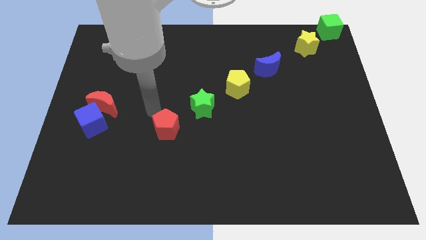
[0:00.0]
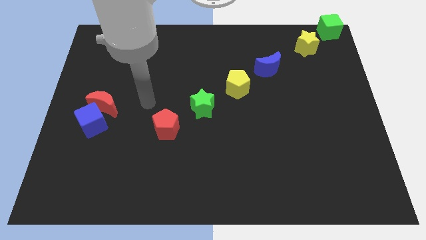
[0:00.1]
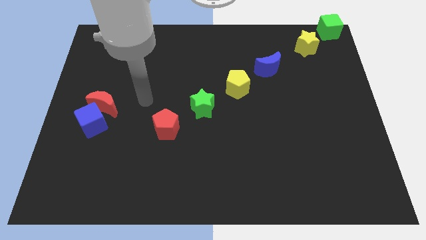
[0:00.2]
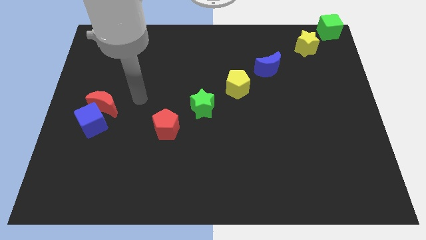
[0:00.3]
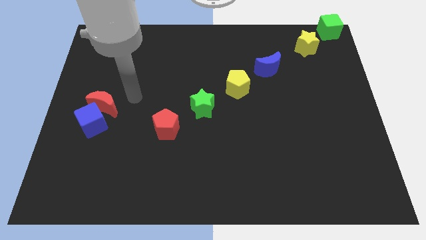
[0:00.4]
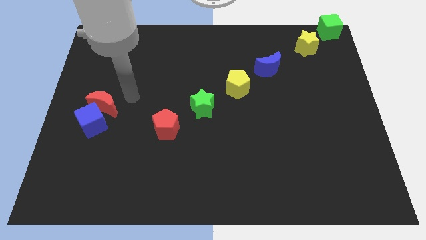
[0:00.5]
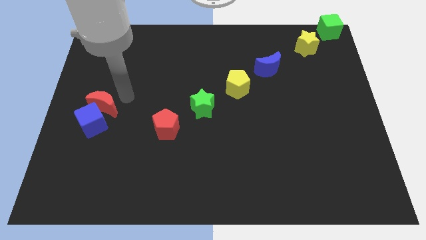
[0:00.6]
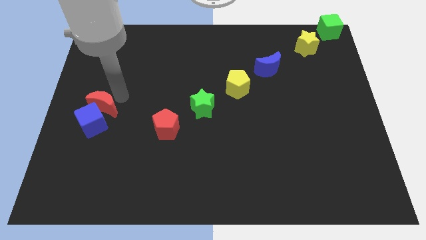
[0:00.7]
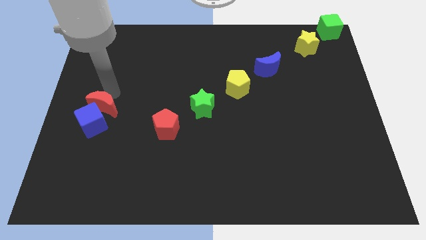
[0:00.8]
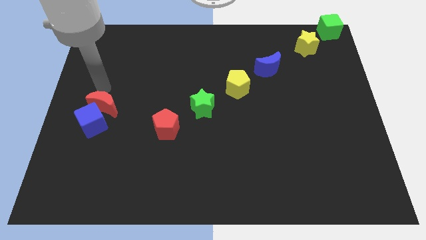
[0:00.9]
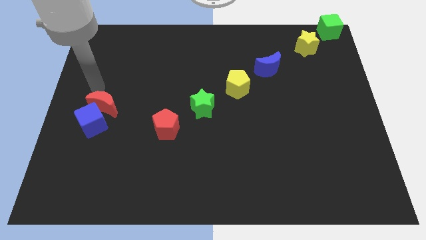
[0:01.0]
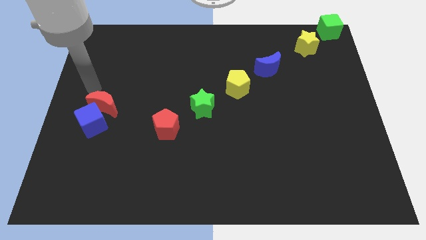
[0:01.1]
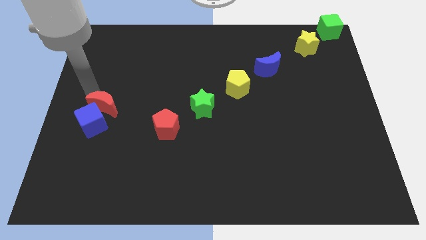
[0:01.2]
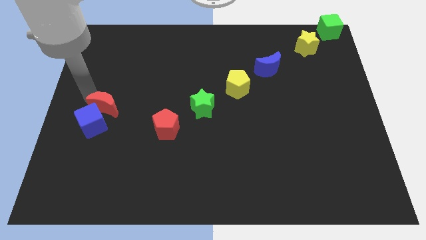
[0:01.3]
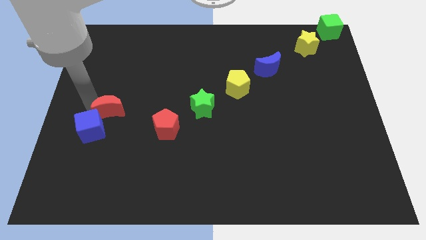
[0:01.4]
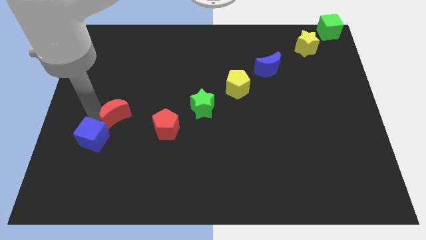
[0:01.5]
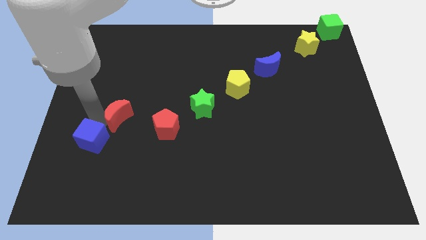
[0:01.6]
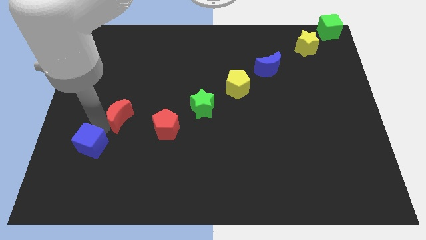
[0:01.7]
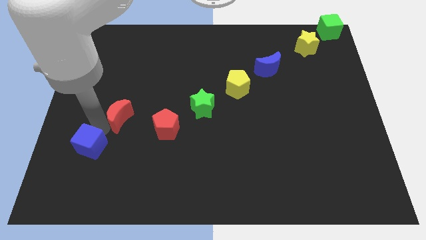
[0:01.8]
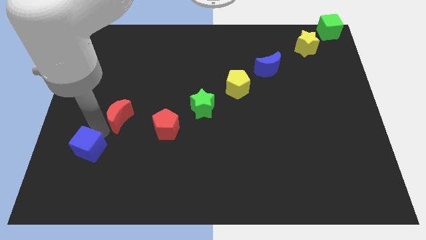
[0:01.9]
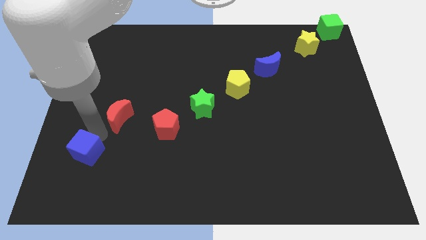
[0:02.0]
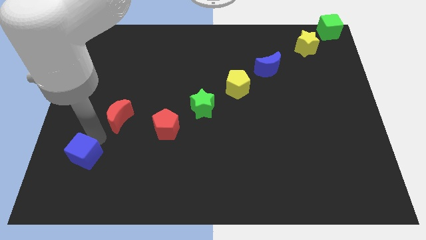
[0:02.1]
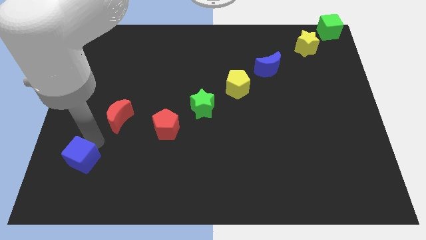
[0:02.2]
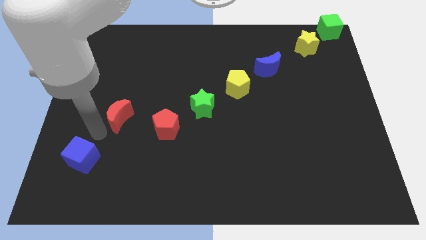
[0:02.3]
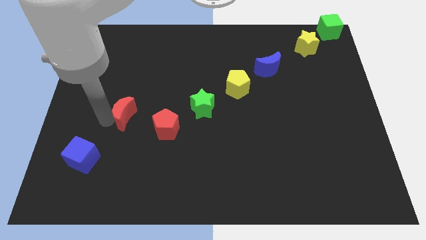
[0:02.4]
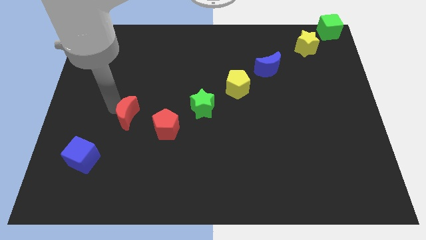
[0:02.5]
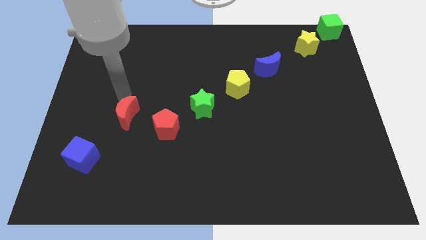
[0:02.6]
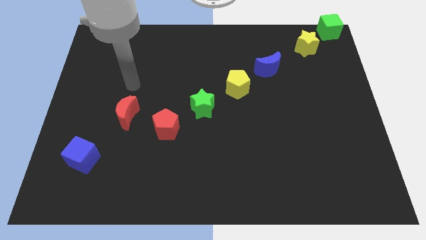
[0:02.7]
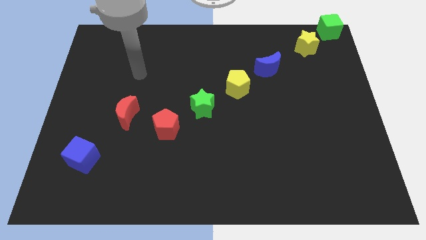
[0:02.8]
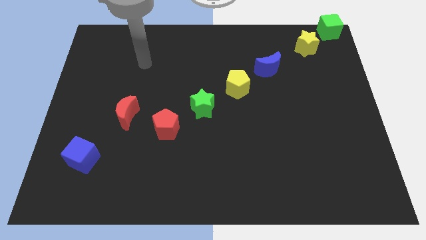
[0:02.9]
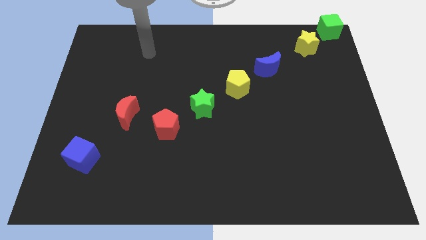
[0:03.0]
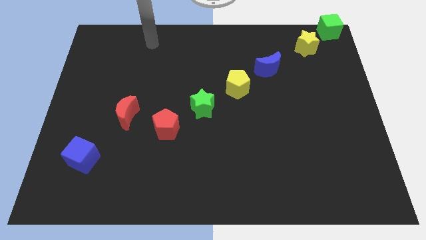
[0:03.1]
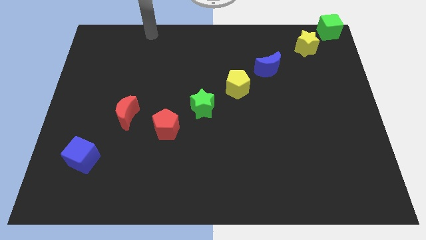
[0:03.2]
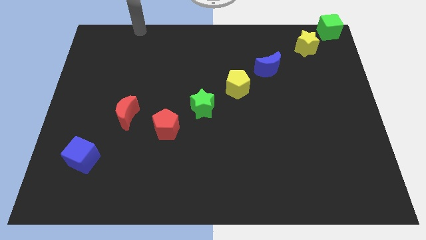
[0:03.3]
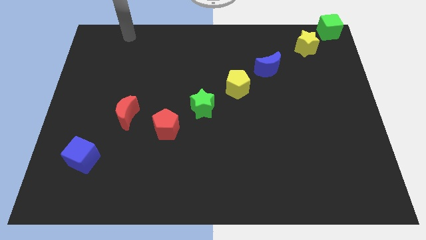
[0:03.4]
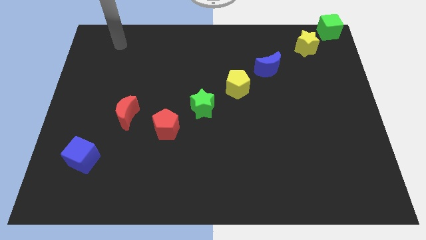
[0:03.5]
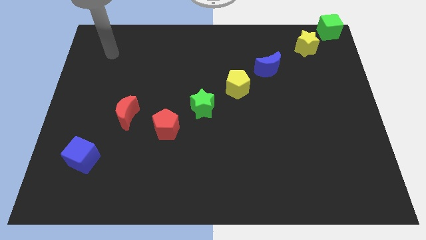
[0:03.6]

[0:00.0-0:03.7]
separate the red crescent from the blue cube

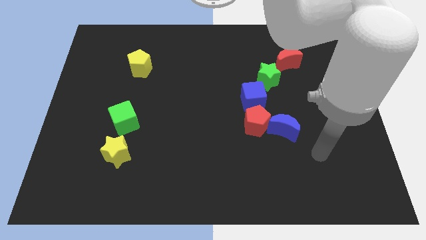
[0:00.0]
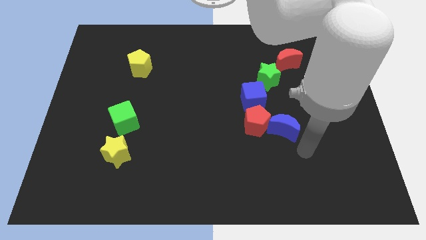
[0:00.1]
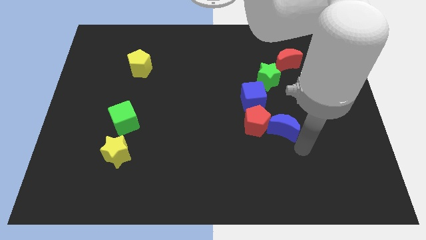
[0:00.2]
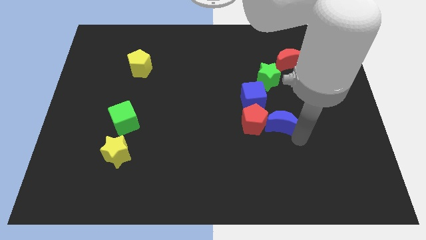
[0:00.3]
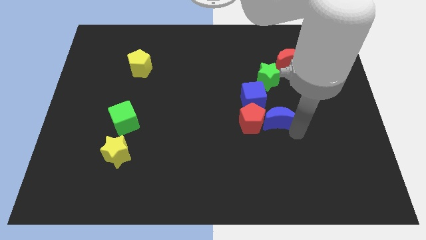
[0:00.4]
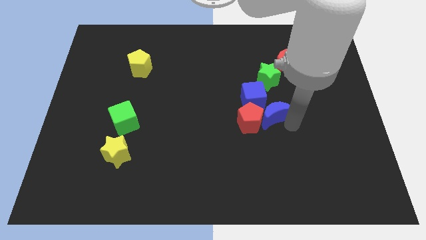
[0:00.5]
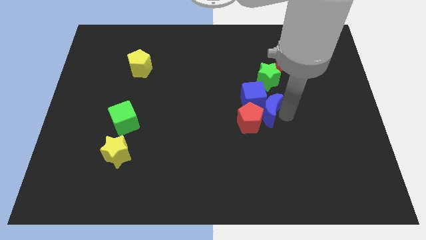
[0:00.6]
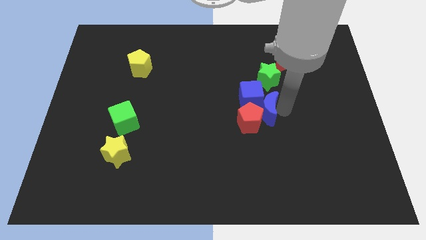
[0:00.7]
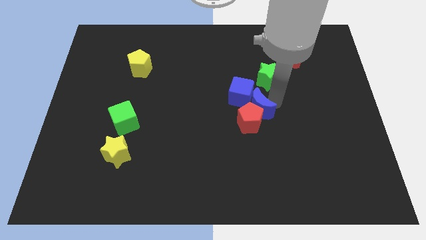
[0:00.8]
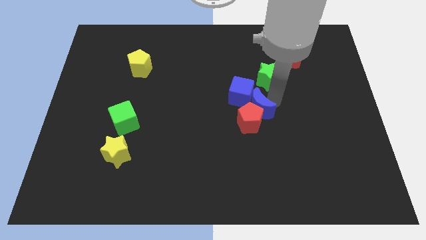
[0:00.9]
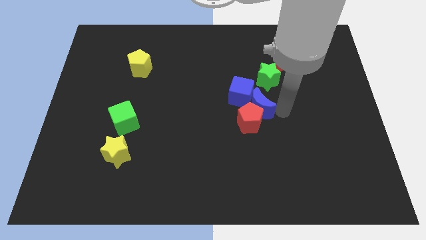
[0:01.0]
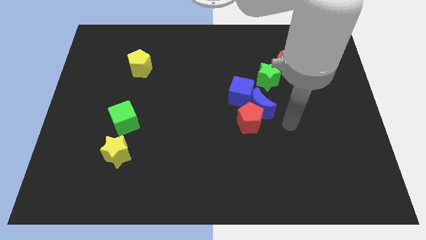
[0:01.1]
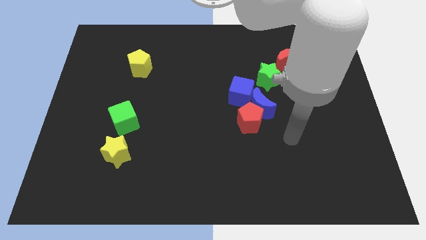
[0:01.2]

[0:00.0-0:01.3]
push the blue moon into blue cube

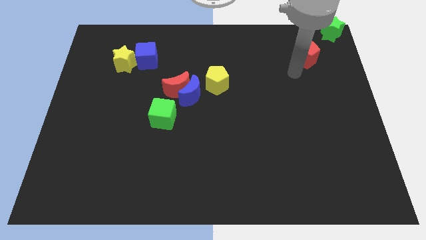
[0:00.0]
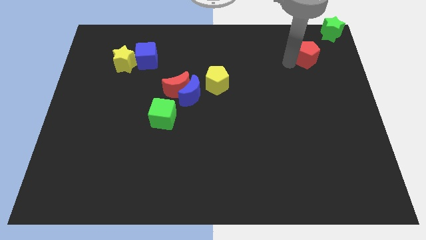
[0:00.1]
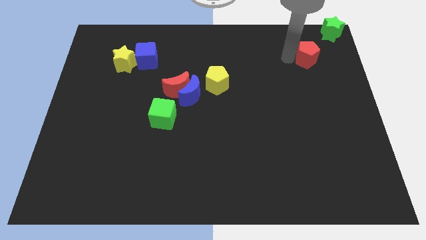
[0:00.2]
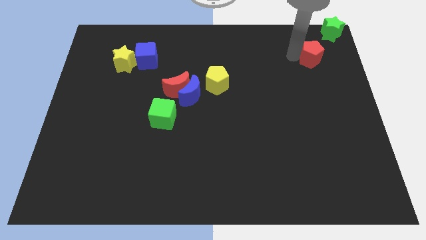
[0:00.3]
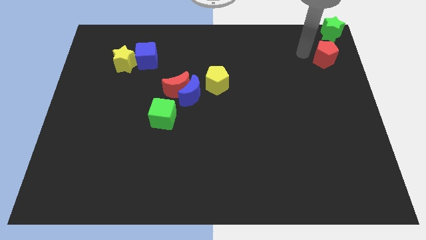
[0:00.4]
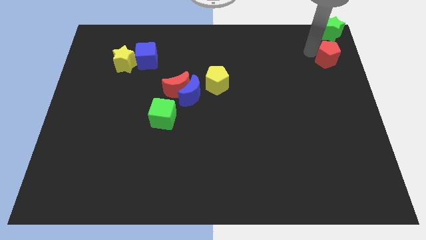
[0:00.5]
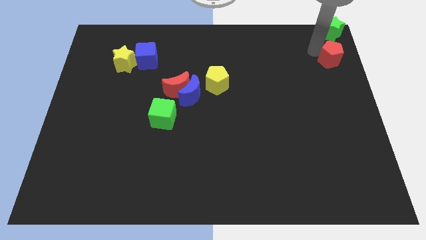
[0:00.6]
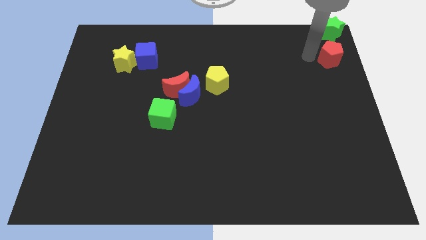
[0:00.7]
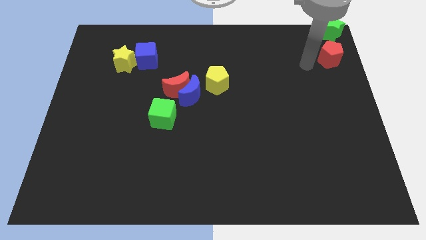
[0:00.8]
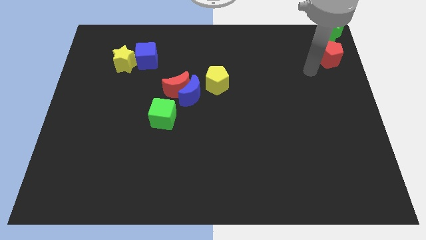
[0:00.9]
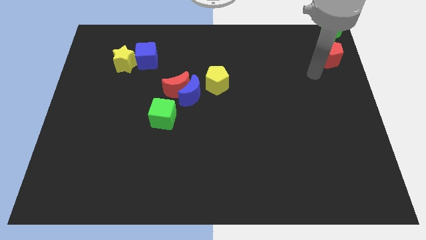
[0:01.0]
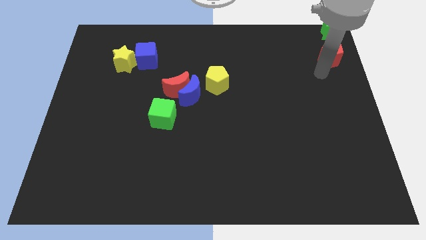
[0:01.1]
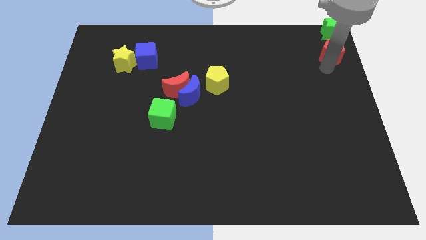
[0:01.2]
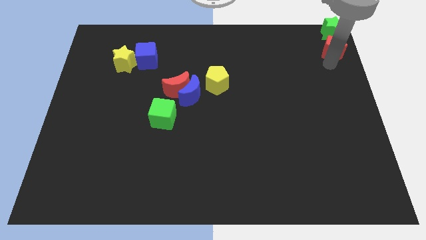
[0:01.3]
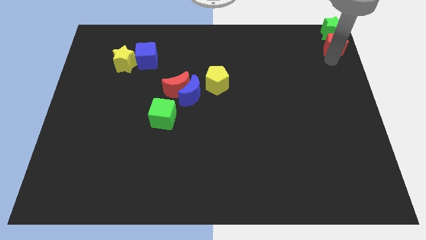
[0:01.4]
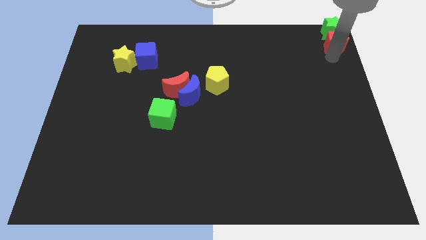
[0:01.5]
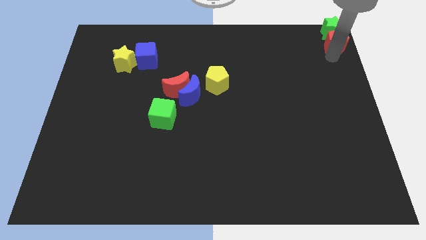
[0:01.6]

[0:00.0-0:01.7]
move the red pentagon to the bottom of the green star

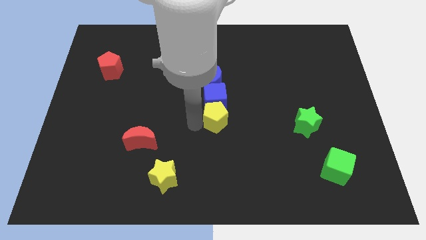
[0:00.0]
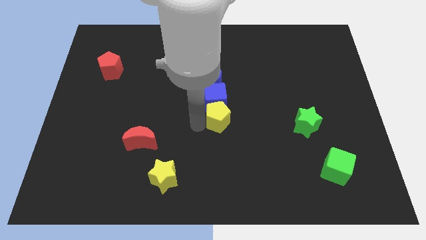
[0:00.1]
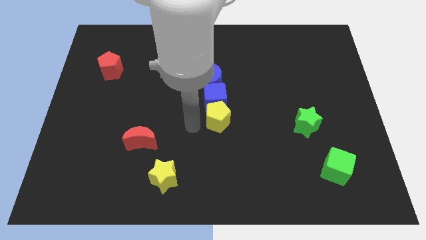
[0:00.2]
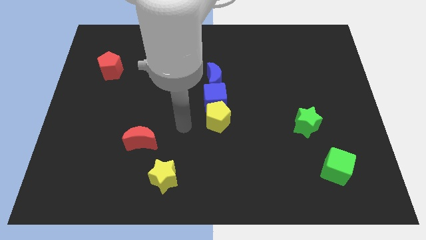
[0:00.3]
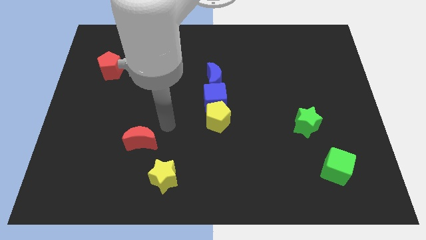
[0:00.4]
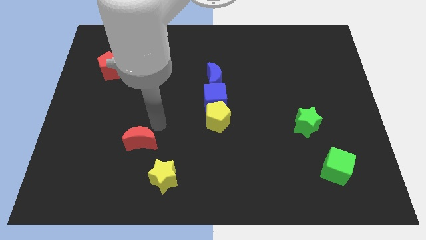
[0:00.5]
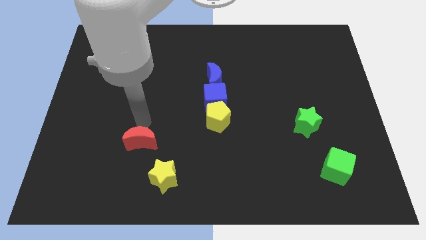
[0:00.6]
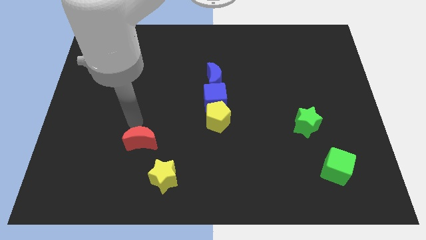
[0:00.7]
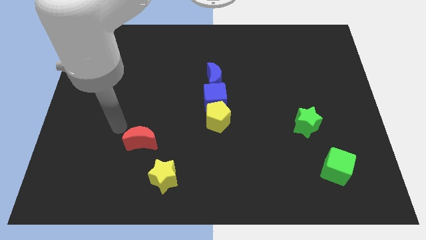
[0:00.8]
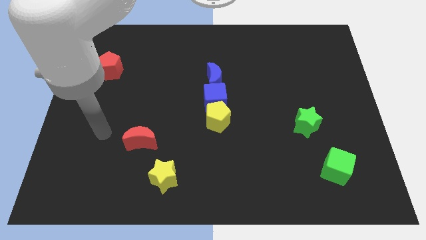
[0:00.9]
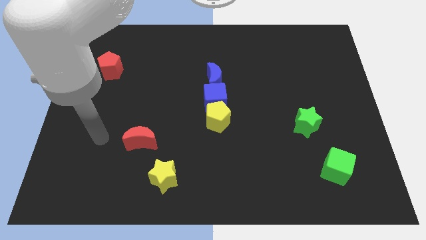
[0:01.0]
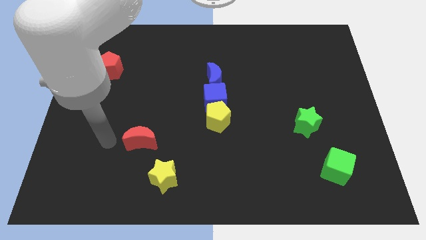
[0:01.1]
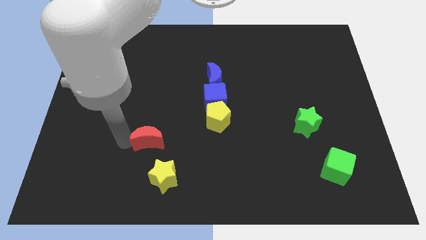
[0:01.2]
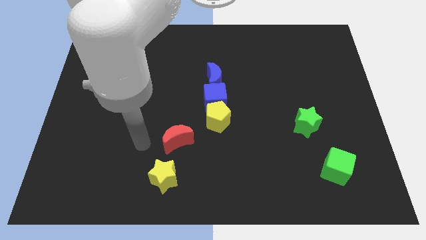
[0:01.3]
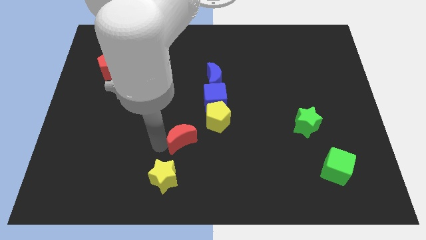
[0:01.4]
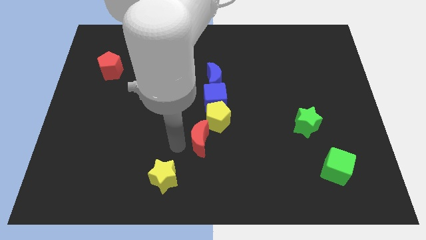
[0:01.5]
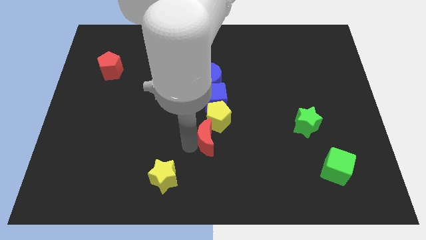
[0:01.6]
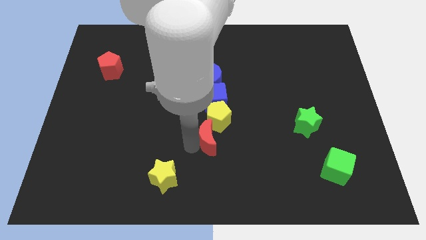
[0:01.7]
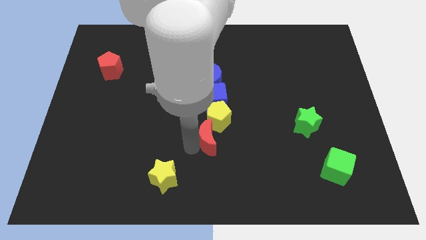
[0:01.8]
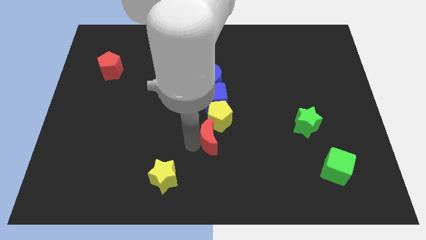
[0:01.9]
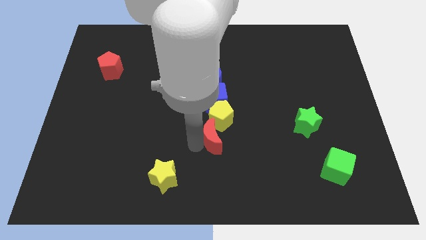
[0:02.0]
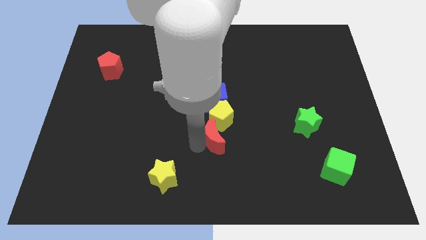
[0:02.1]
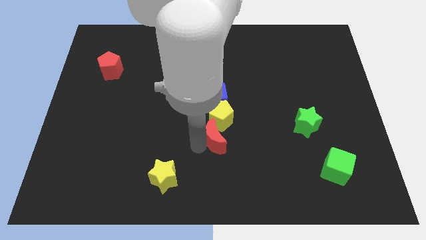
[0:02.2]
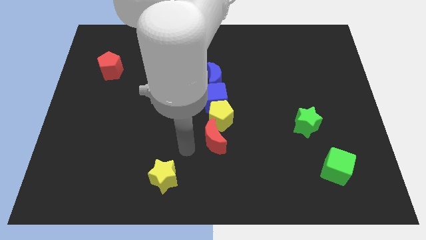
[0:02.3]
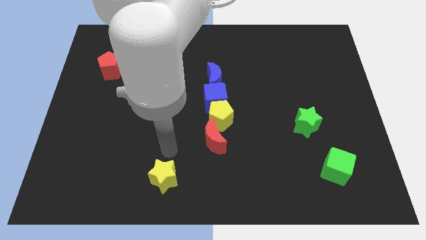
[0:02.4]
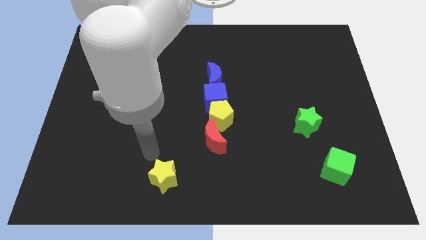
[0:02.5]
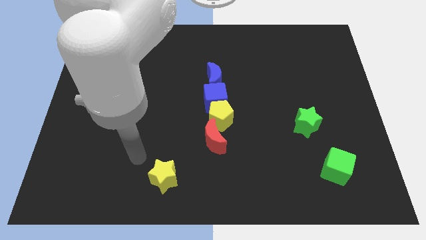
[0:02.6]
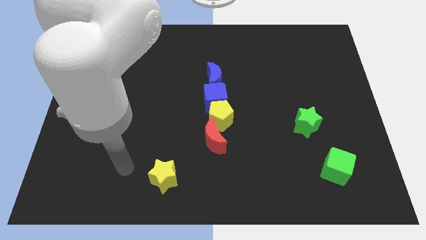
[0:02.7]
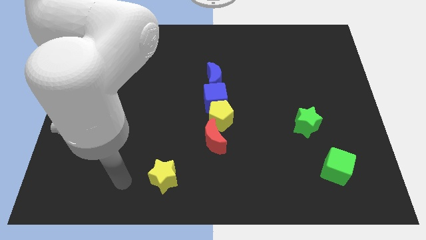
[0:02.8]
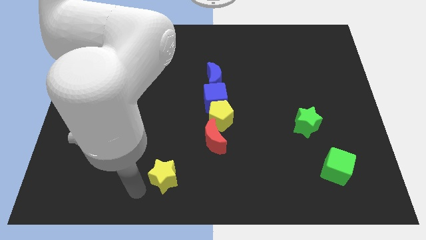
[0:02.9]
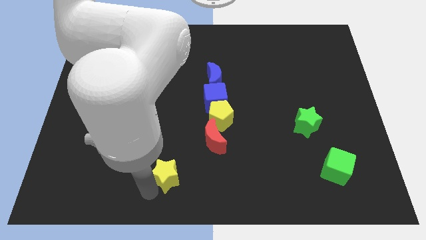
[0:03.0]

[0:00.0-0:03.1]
move the red moon vertically below the yellow pentagon
